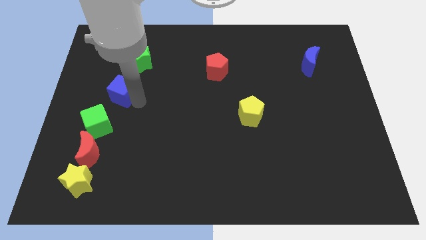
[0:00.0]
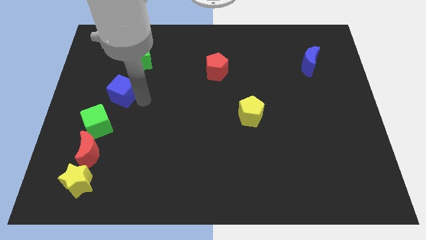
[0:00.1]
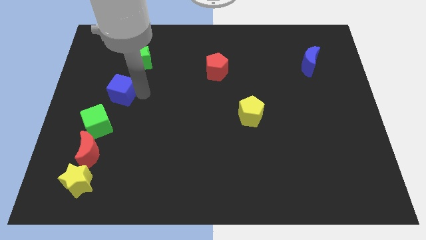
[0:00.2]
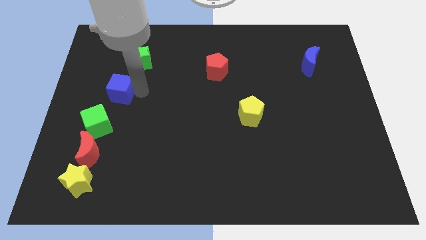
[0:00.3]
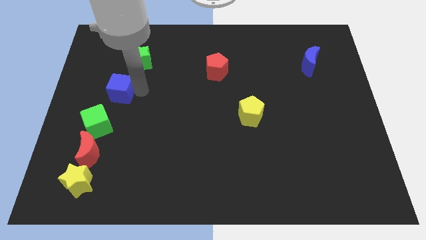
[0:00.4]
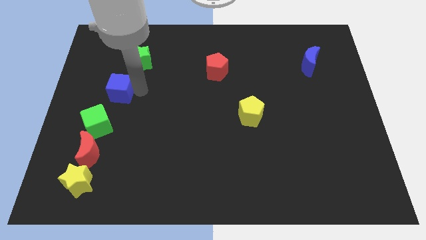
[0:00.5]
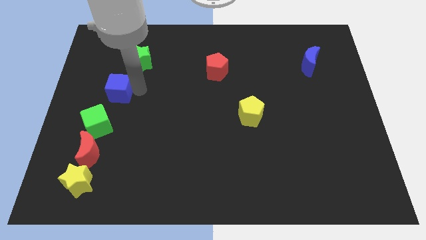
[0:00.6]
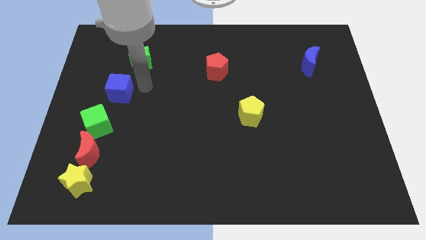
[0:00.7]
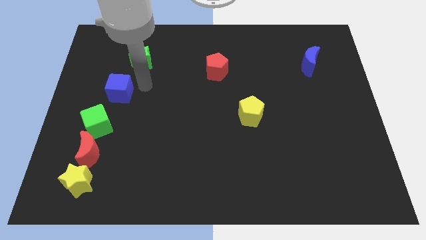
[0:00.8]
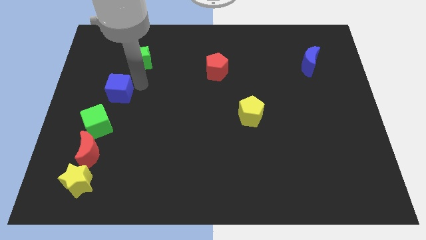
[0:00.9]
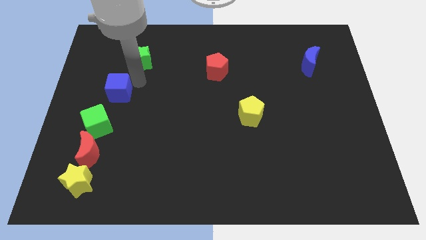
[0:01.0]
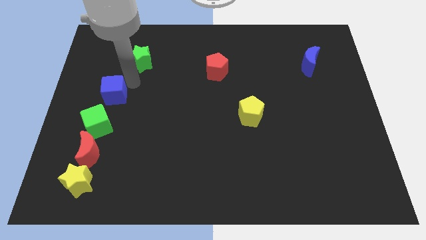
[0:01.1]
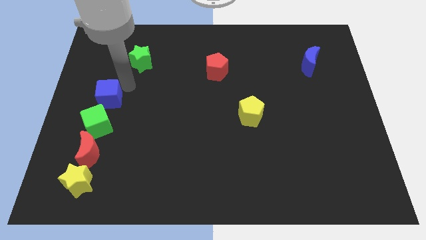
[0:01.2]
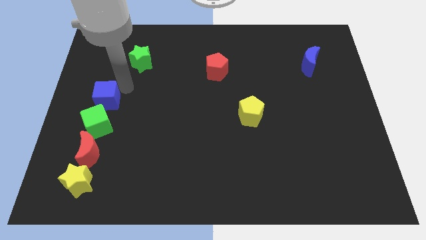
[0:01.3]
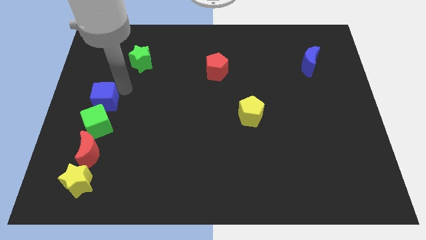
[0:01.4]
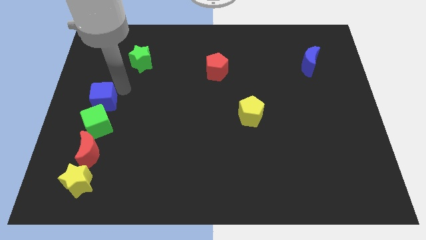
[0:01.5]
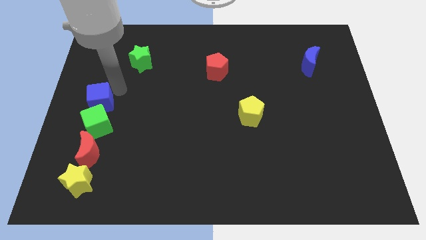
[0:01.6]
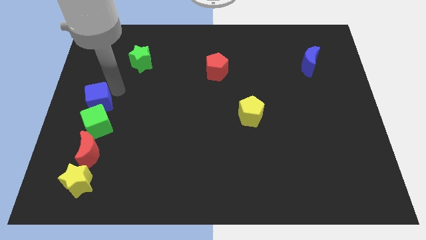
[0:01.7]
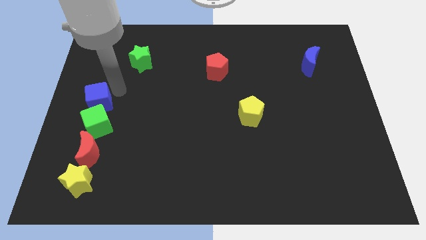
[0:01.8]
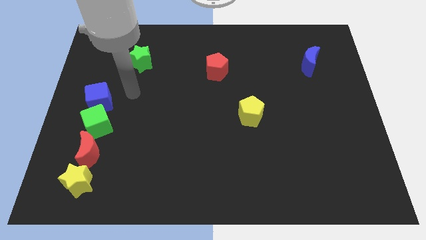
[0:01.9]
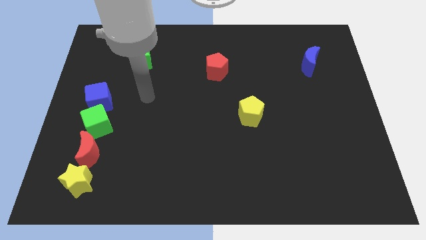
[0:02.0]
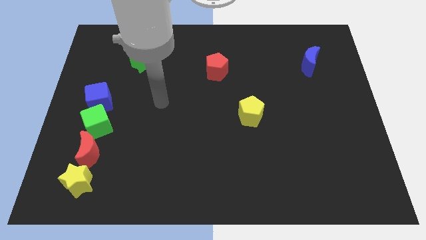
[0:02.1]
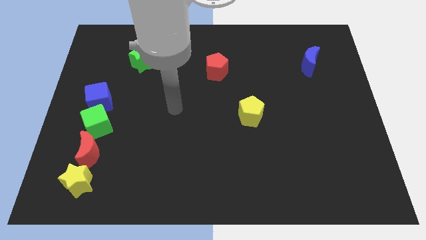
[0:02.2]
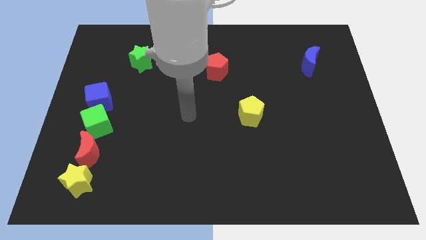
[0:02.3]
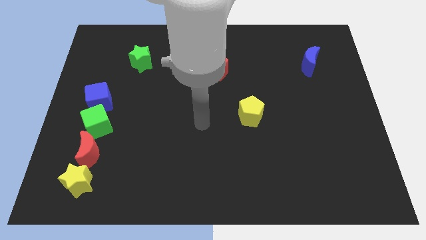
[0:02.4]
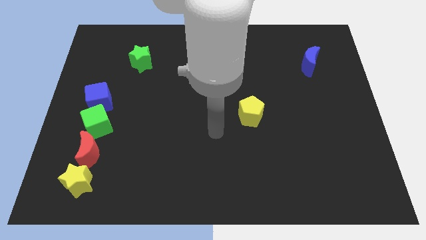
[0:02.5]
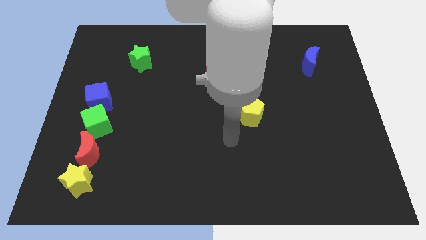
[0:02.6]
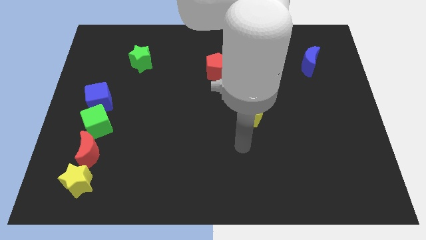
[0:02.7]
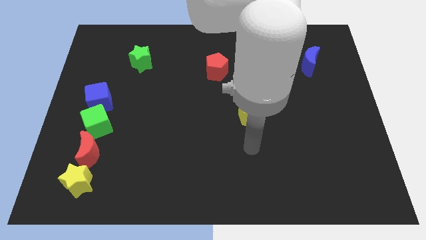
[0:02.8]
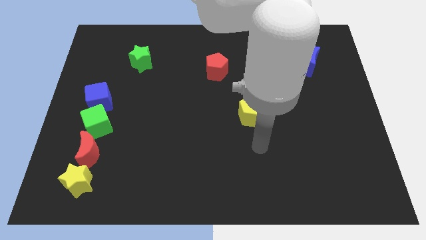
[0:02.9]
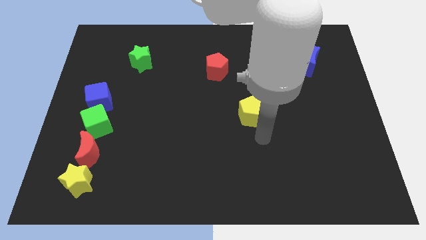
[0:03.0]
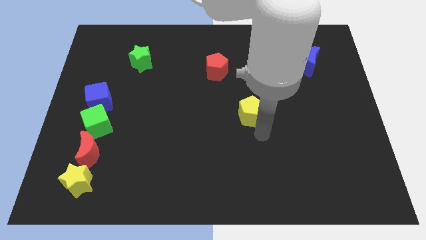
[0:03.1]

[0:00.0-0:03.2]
place the arm down to the yellow pentagon

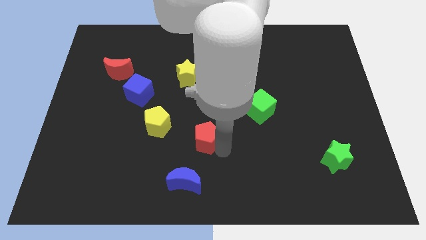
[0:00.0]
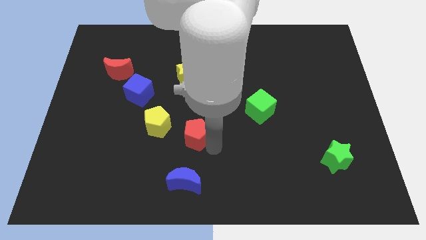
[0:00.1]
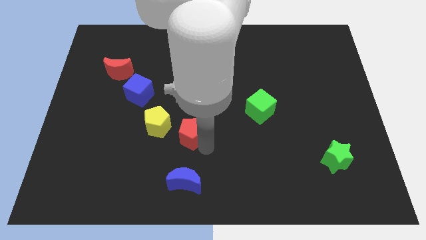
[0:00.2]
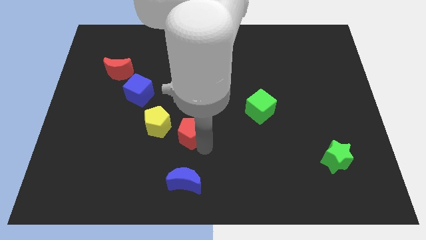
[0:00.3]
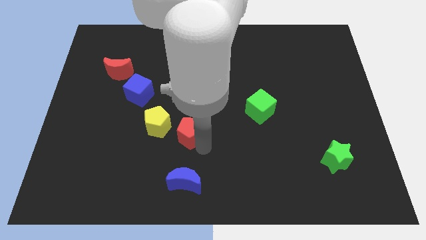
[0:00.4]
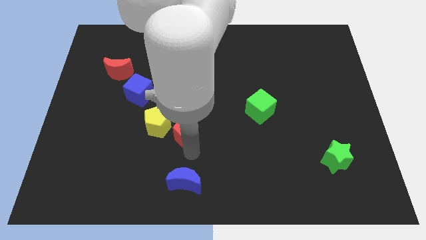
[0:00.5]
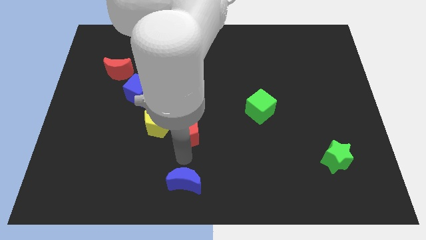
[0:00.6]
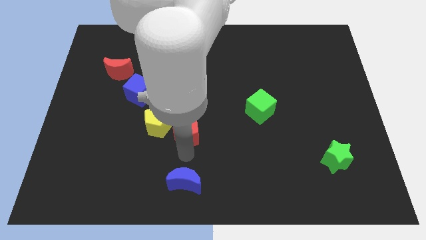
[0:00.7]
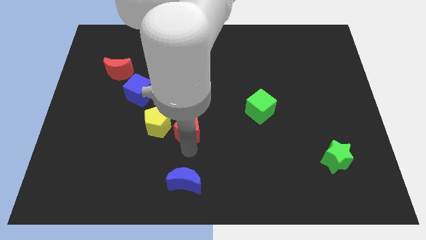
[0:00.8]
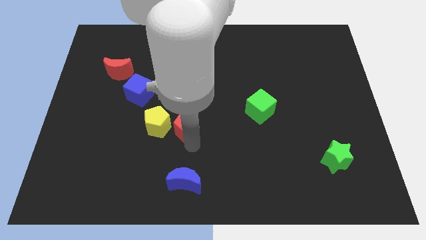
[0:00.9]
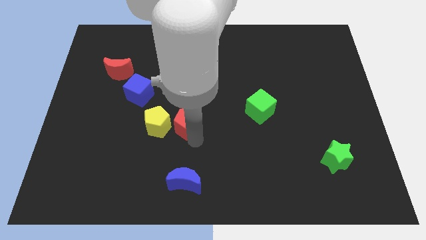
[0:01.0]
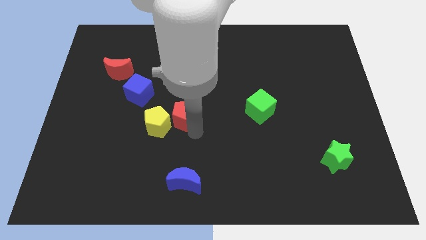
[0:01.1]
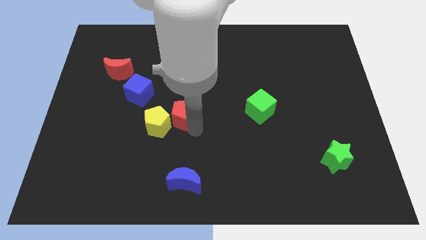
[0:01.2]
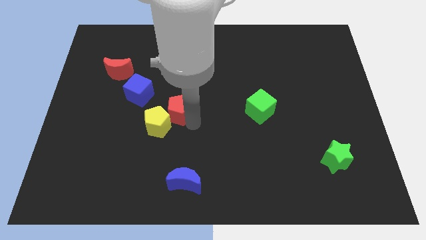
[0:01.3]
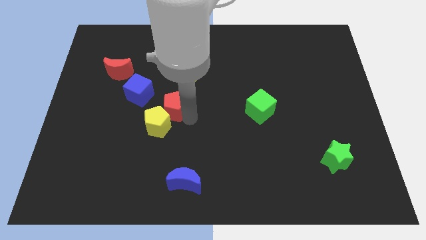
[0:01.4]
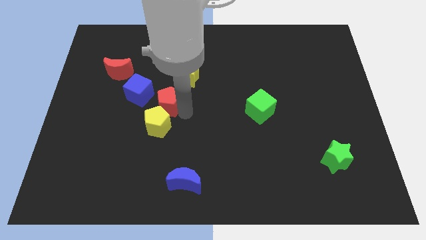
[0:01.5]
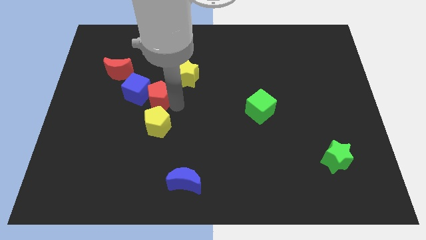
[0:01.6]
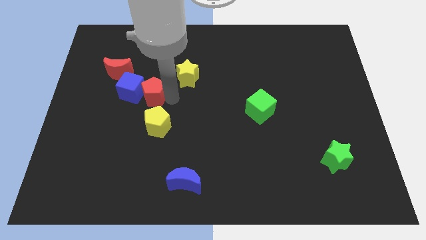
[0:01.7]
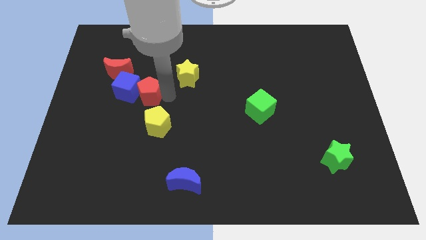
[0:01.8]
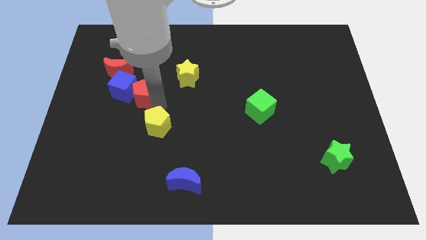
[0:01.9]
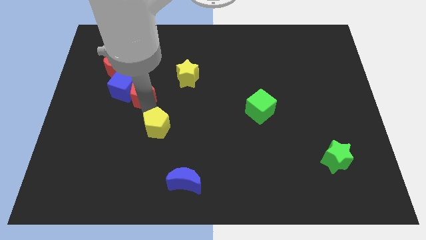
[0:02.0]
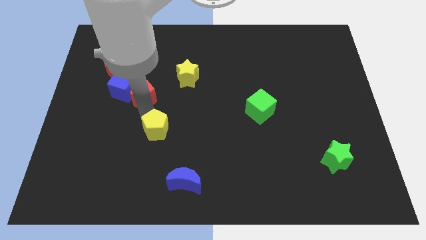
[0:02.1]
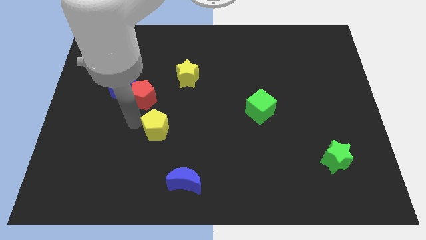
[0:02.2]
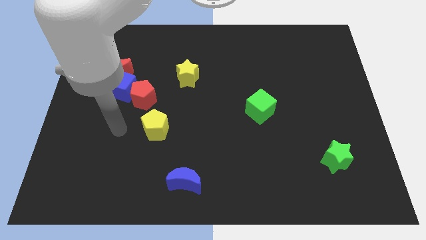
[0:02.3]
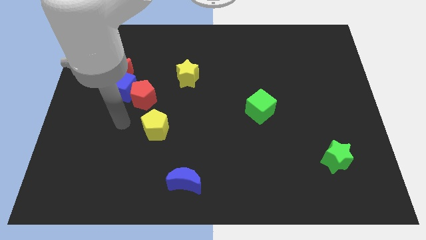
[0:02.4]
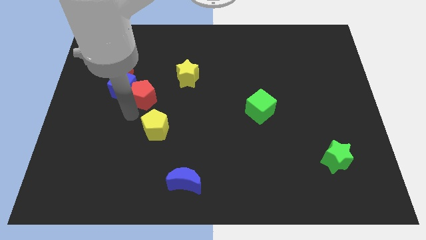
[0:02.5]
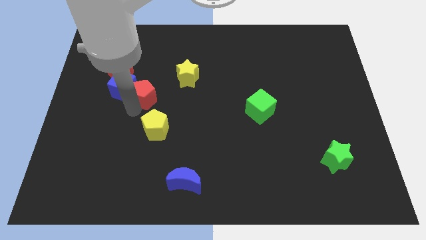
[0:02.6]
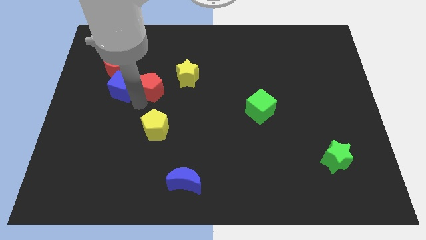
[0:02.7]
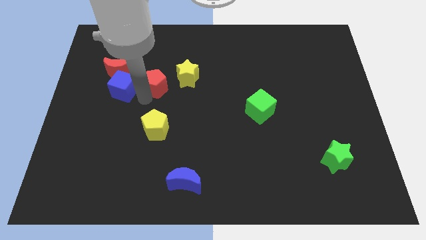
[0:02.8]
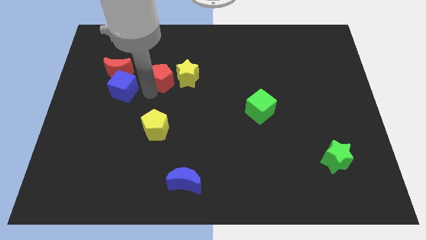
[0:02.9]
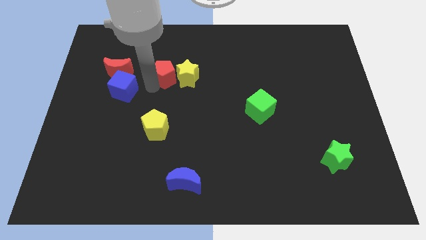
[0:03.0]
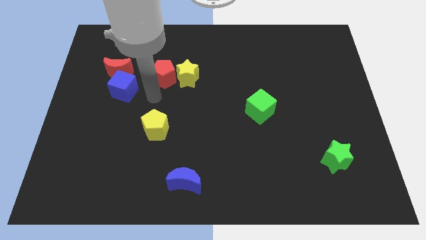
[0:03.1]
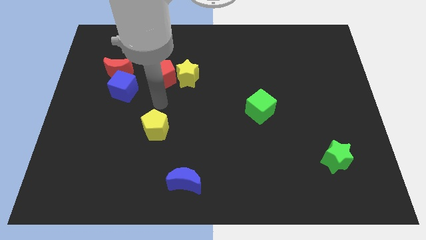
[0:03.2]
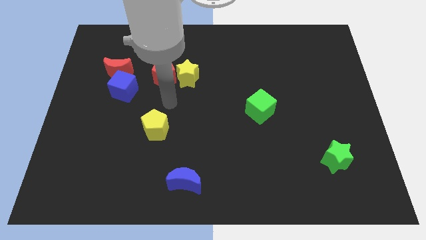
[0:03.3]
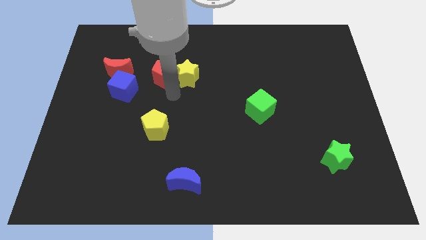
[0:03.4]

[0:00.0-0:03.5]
push the red pentagon and place it close to the yellow star

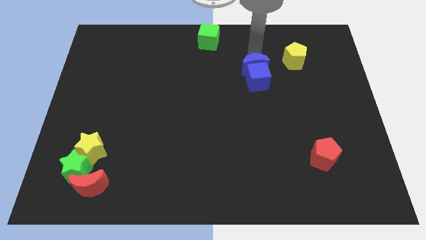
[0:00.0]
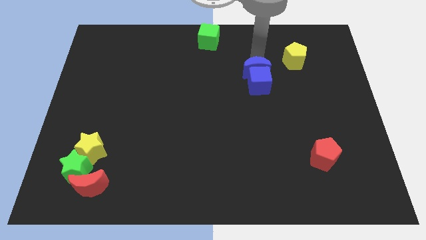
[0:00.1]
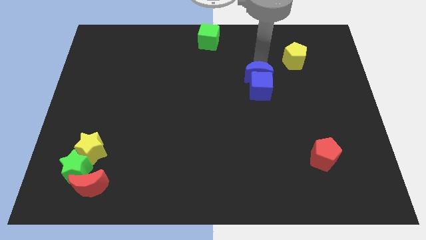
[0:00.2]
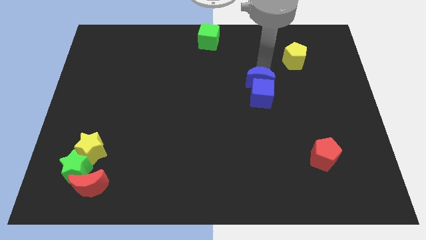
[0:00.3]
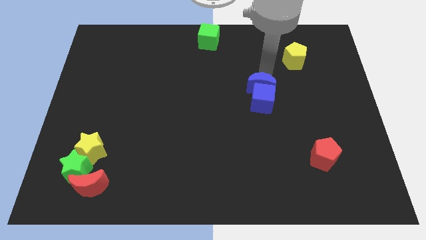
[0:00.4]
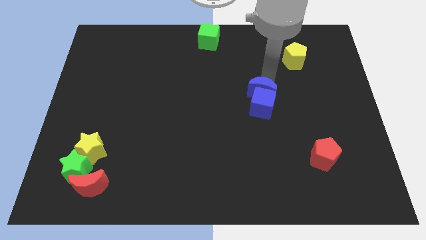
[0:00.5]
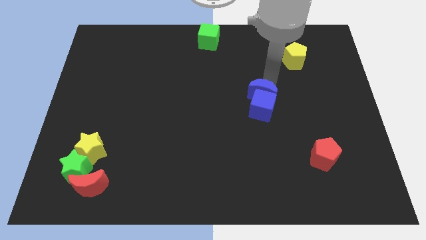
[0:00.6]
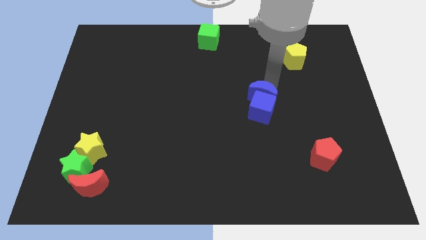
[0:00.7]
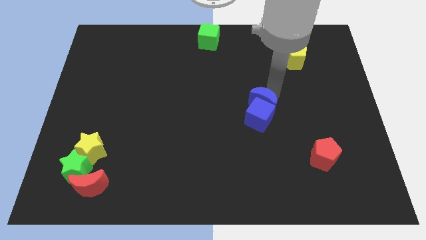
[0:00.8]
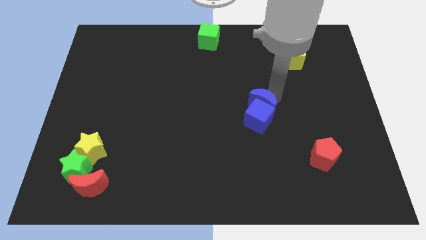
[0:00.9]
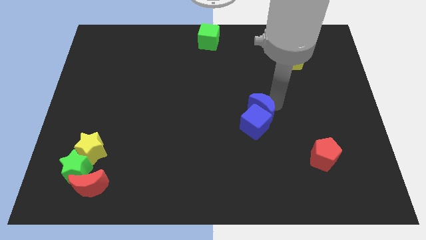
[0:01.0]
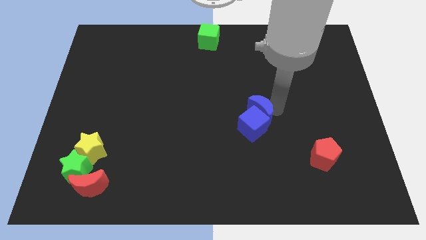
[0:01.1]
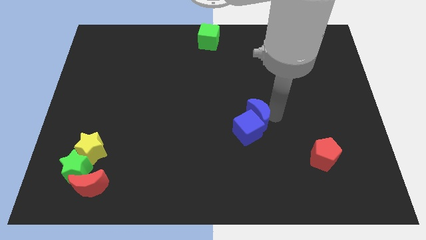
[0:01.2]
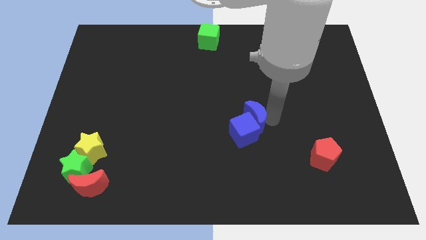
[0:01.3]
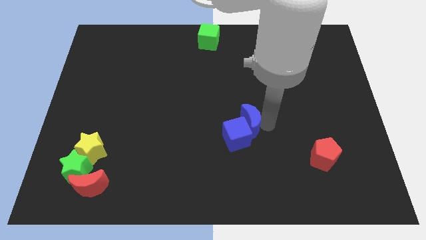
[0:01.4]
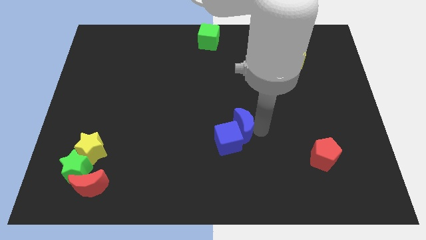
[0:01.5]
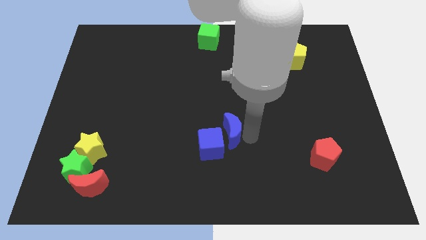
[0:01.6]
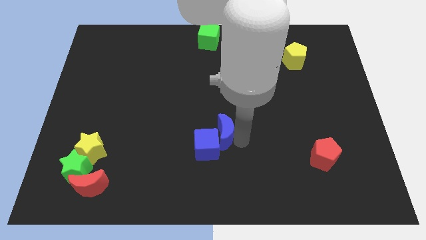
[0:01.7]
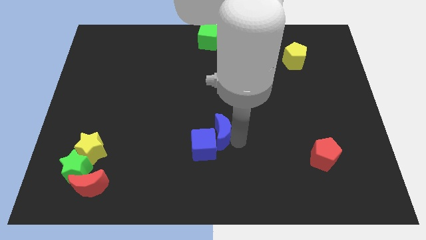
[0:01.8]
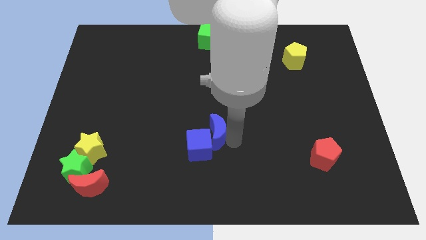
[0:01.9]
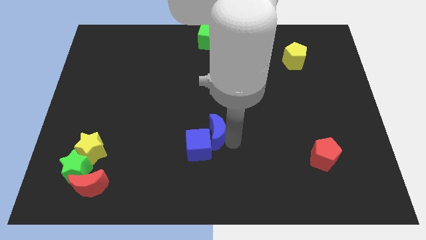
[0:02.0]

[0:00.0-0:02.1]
move the blue cube and blue crescent towards bottom of the board

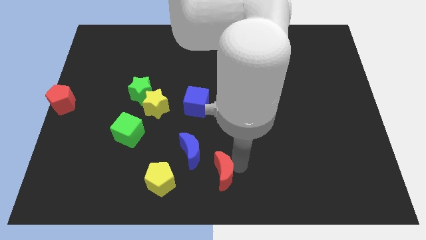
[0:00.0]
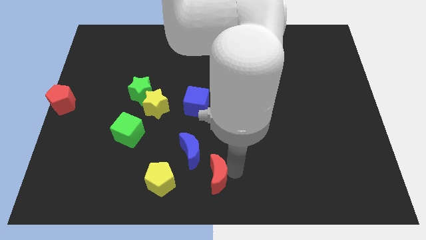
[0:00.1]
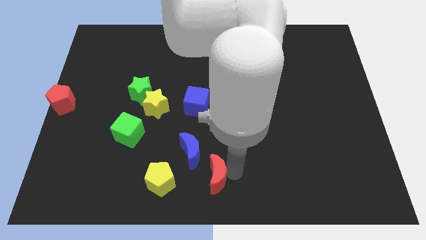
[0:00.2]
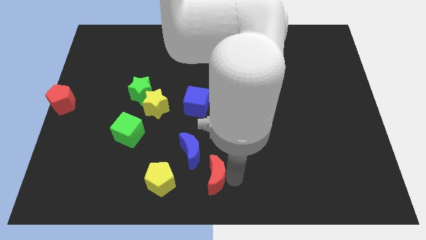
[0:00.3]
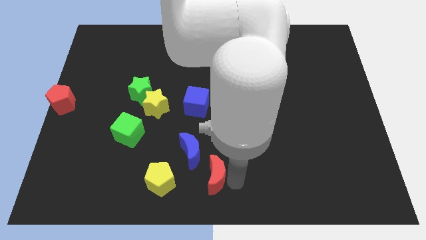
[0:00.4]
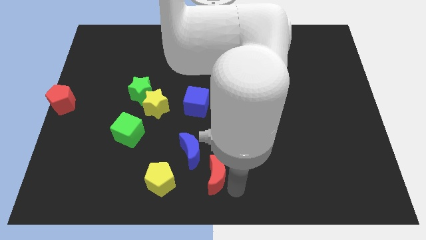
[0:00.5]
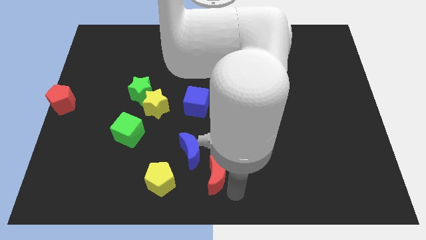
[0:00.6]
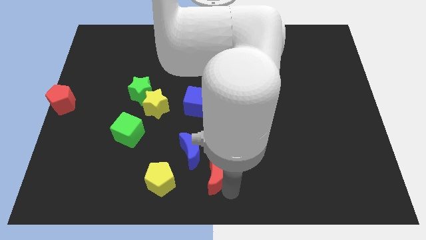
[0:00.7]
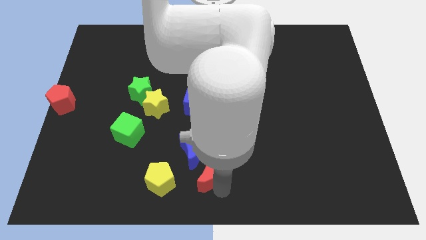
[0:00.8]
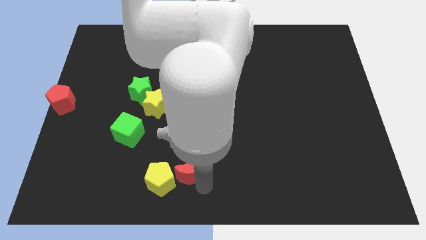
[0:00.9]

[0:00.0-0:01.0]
move the red crescent to the bottom of the blue crescent
